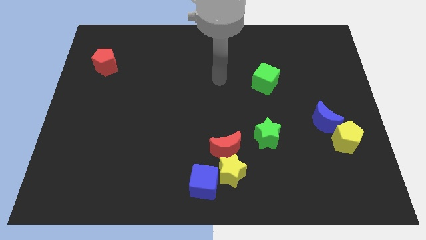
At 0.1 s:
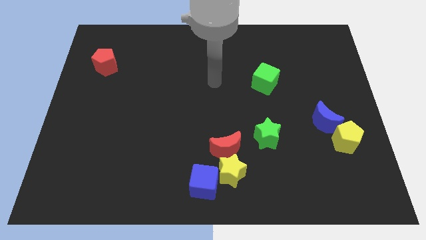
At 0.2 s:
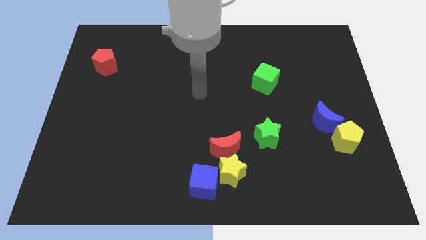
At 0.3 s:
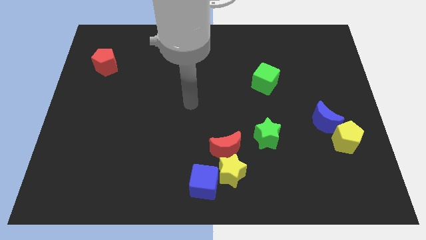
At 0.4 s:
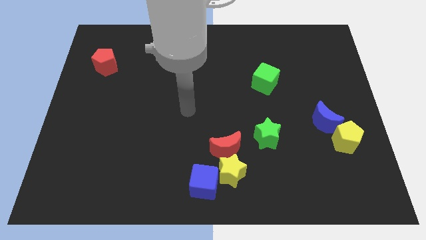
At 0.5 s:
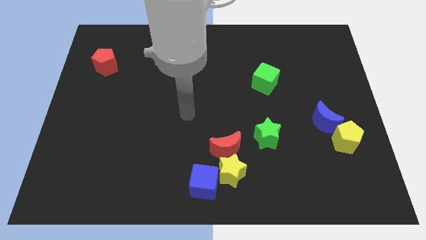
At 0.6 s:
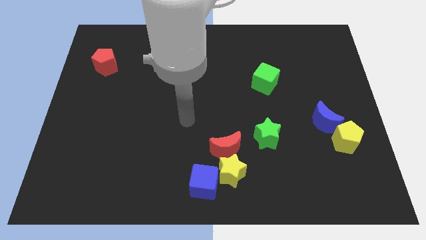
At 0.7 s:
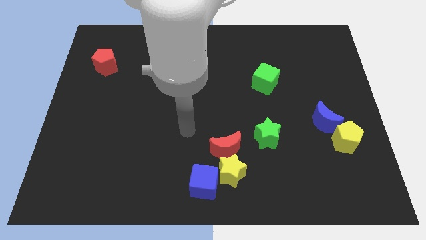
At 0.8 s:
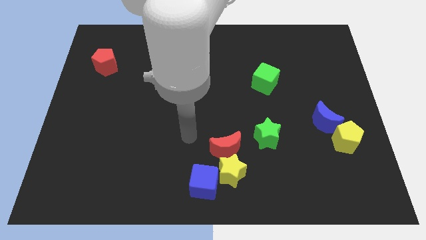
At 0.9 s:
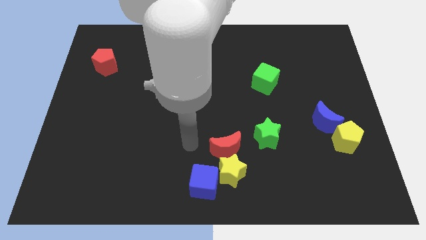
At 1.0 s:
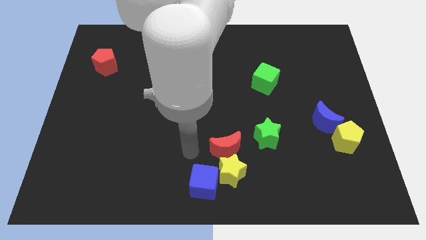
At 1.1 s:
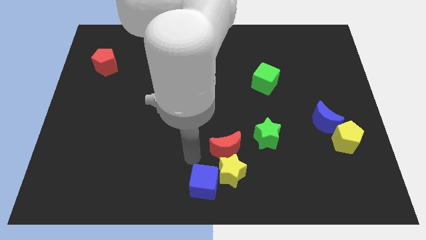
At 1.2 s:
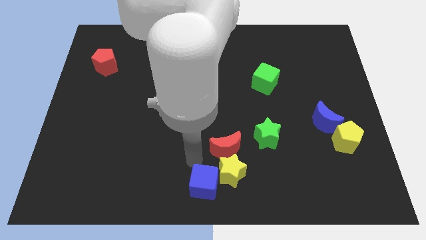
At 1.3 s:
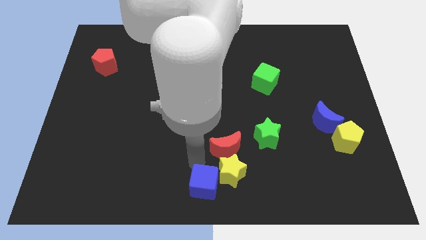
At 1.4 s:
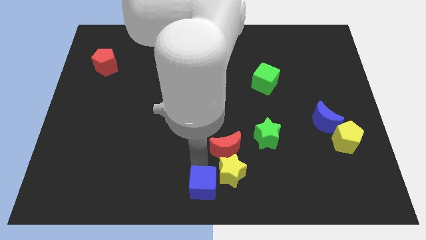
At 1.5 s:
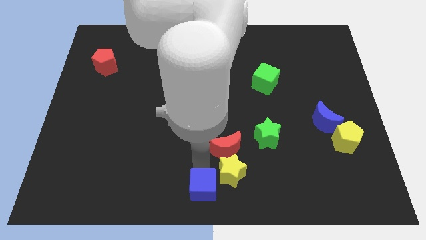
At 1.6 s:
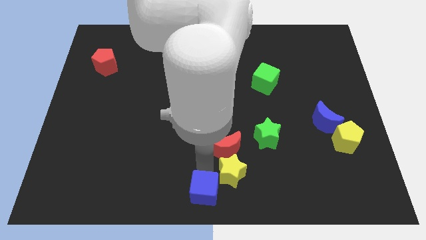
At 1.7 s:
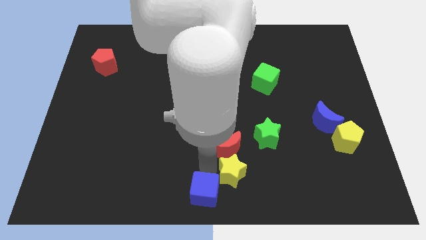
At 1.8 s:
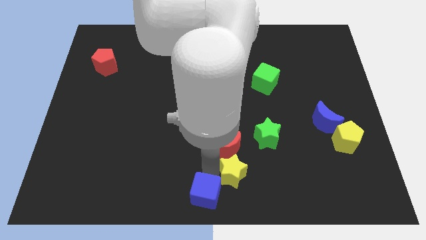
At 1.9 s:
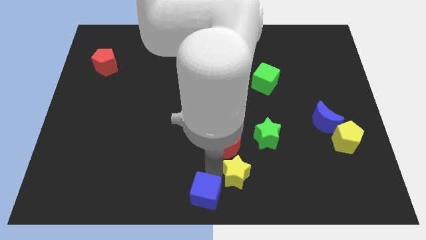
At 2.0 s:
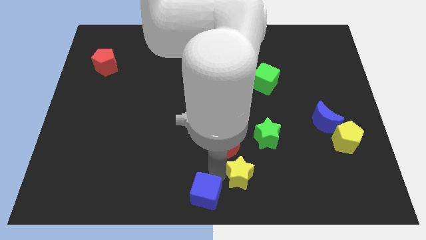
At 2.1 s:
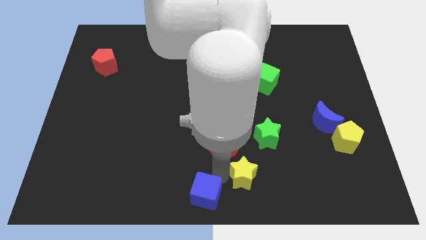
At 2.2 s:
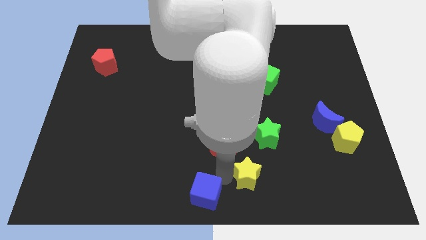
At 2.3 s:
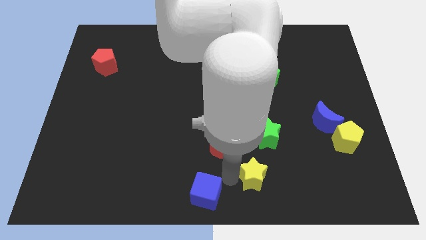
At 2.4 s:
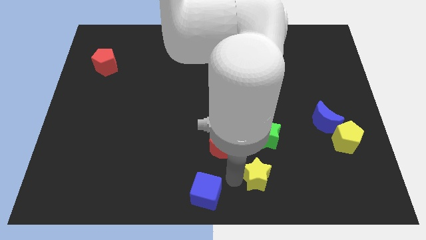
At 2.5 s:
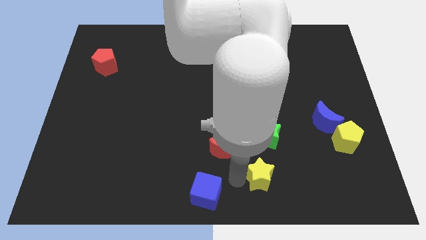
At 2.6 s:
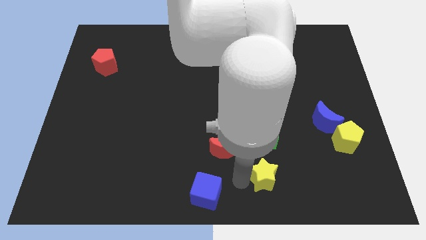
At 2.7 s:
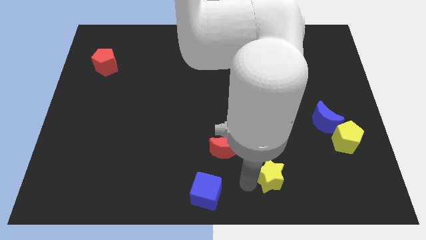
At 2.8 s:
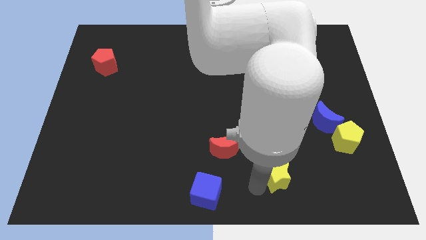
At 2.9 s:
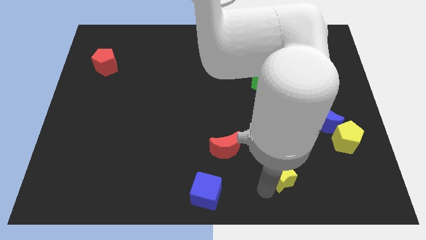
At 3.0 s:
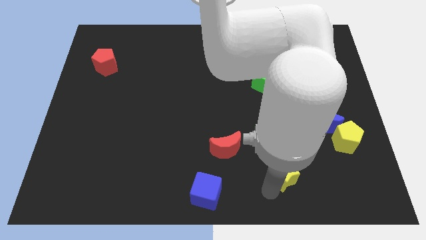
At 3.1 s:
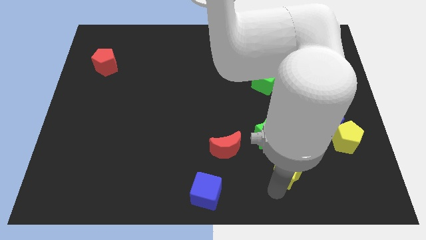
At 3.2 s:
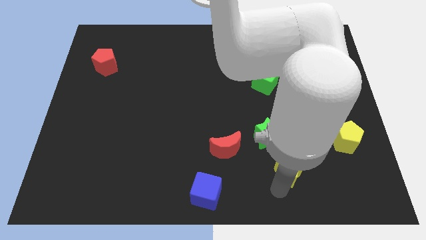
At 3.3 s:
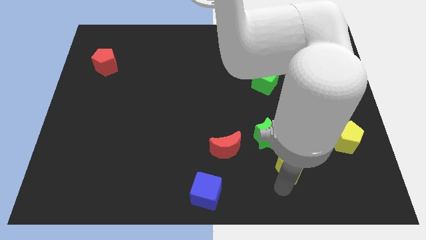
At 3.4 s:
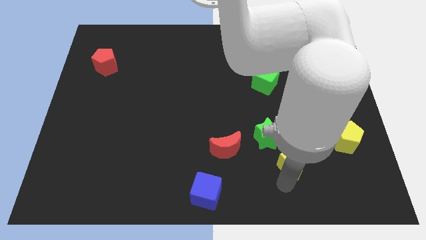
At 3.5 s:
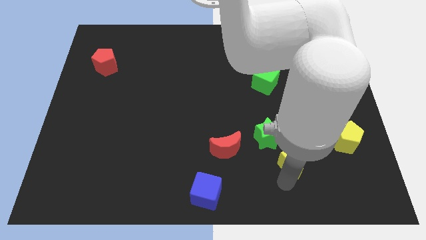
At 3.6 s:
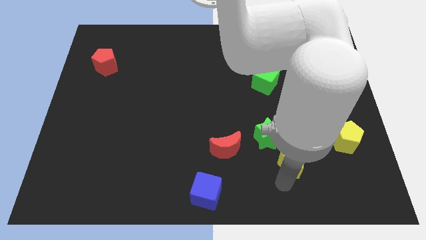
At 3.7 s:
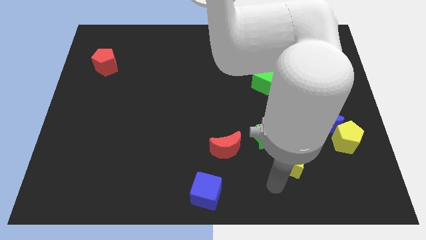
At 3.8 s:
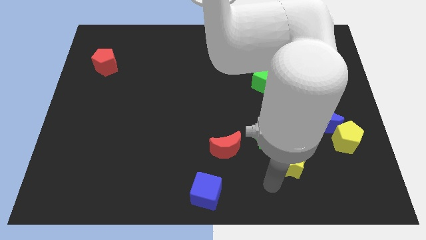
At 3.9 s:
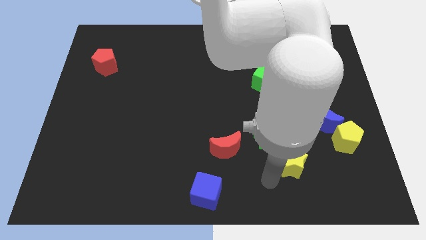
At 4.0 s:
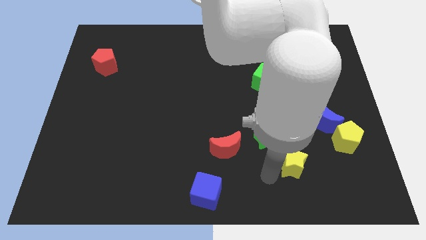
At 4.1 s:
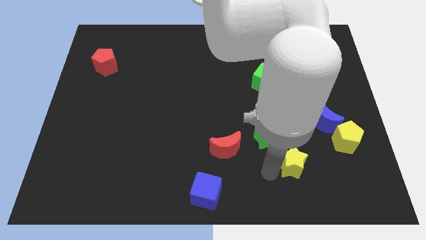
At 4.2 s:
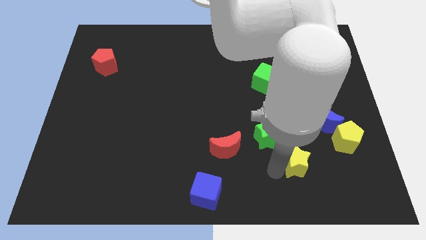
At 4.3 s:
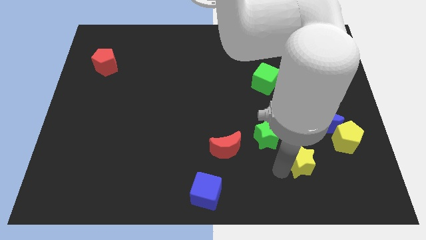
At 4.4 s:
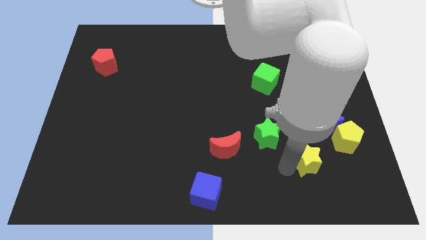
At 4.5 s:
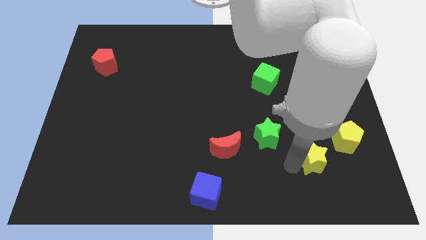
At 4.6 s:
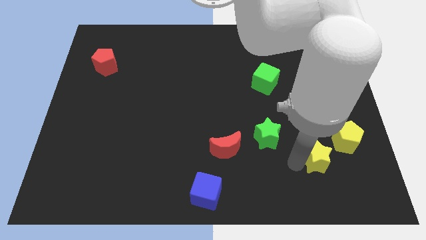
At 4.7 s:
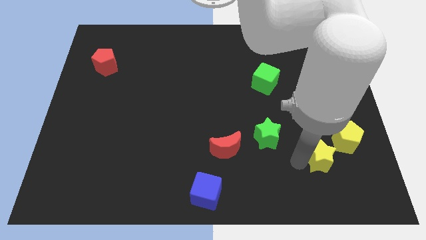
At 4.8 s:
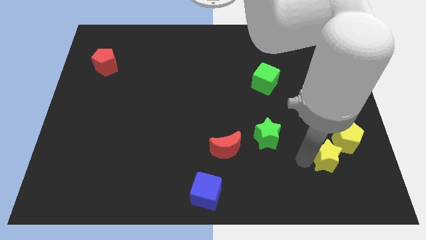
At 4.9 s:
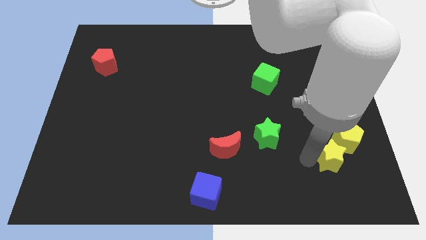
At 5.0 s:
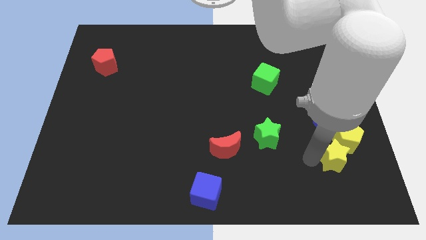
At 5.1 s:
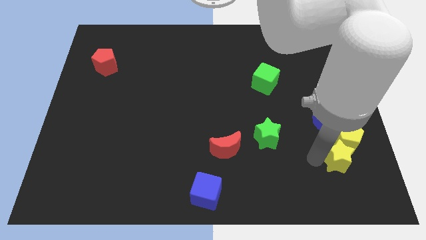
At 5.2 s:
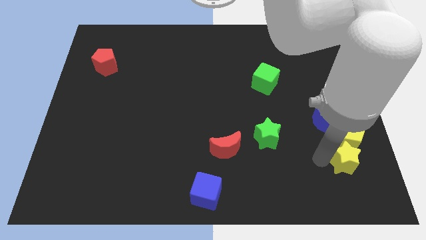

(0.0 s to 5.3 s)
slide the yellow star close to the yellow pentagon

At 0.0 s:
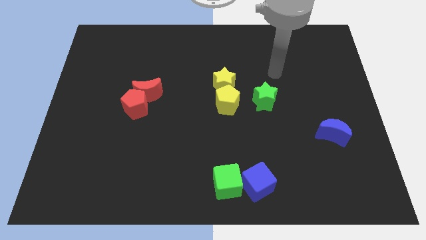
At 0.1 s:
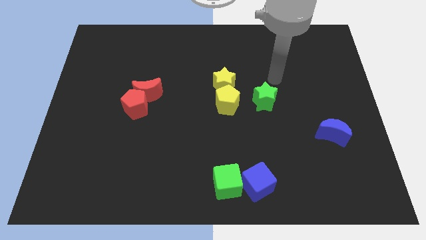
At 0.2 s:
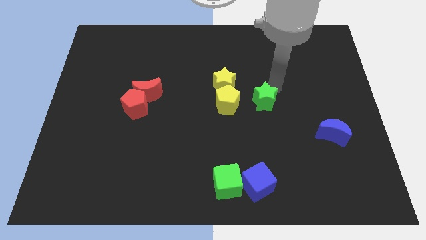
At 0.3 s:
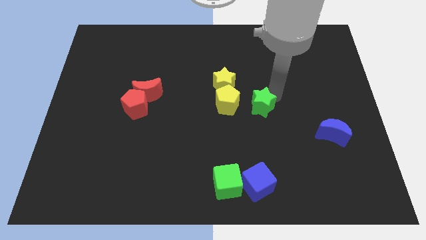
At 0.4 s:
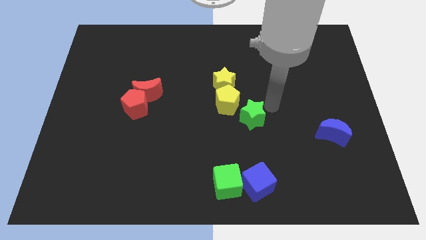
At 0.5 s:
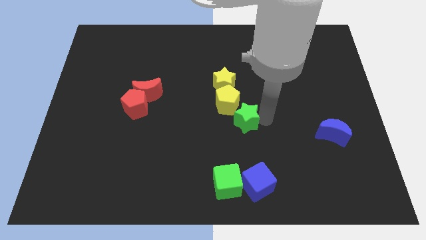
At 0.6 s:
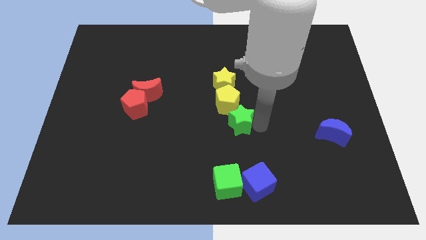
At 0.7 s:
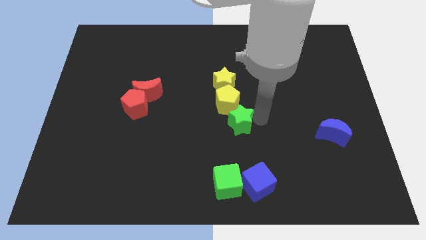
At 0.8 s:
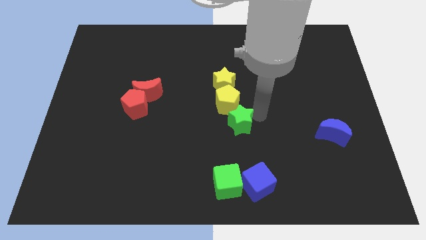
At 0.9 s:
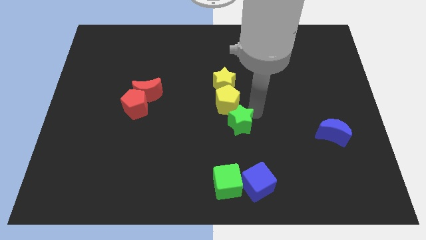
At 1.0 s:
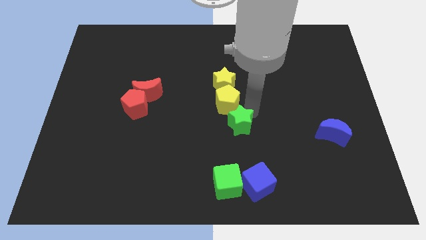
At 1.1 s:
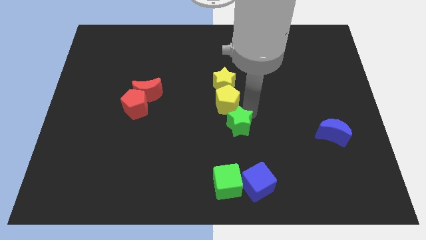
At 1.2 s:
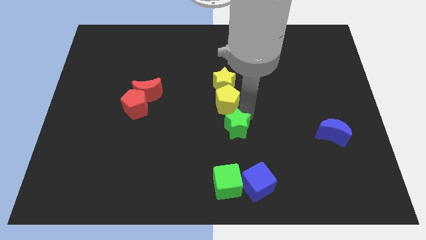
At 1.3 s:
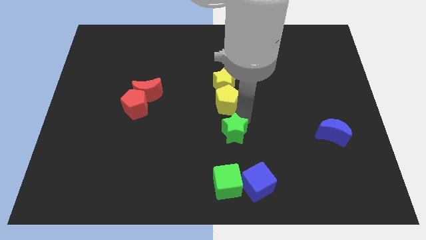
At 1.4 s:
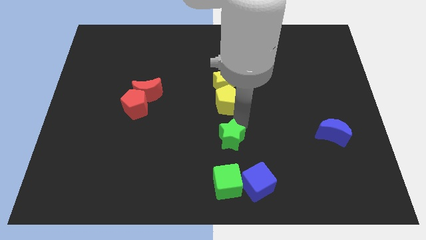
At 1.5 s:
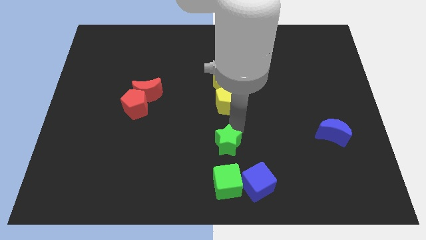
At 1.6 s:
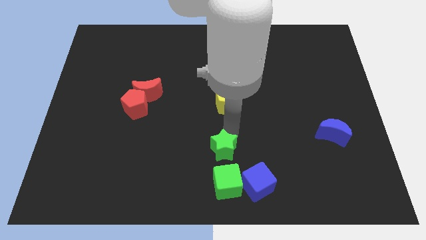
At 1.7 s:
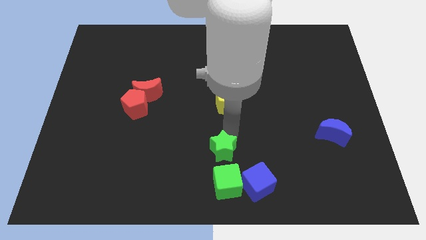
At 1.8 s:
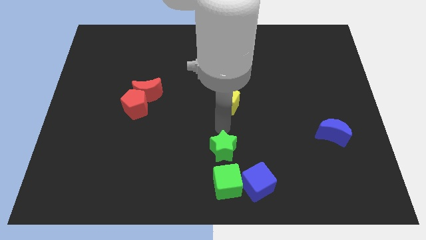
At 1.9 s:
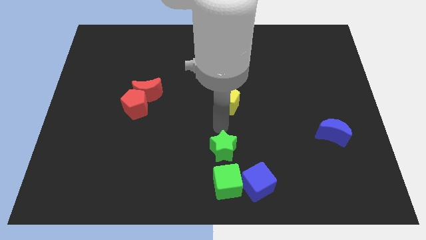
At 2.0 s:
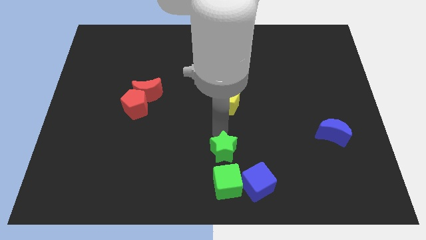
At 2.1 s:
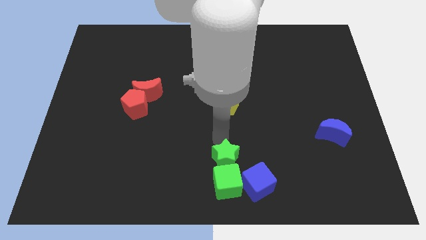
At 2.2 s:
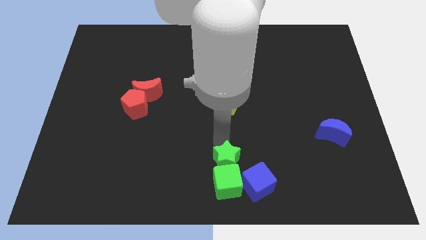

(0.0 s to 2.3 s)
put the green star towards the green cube

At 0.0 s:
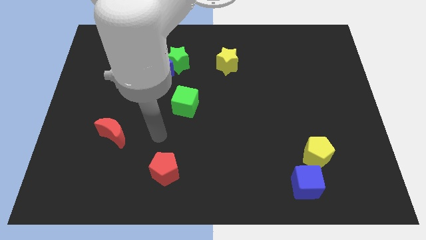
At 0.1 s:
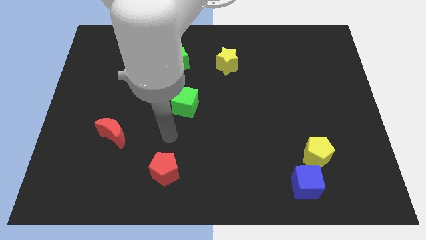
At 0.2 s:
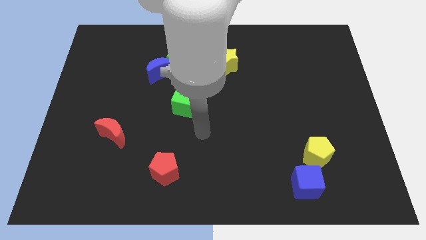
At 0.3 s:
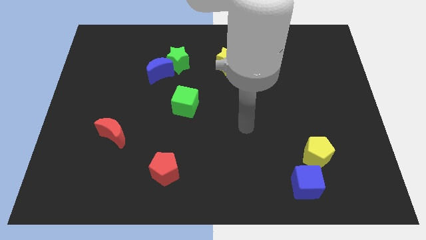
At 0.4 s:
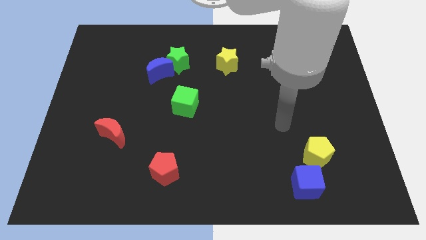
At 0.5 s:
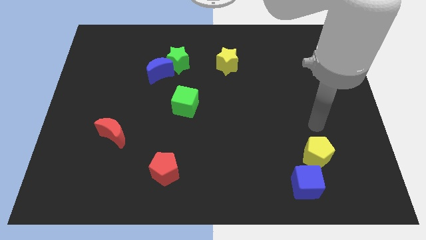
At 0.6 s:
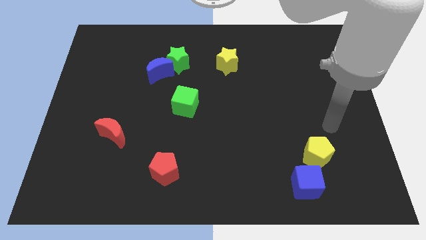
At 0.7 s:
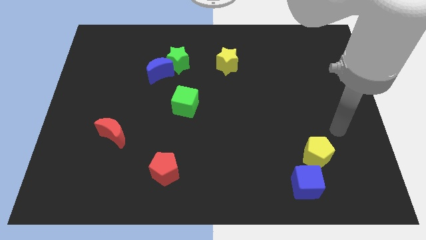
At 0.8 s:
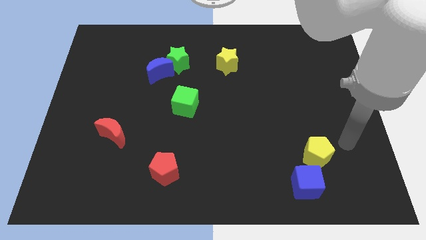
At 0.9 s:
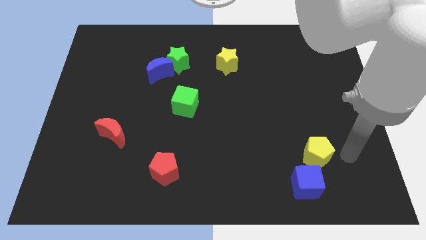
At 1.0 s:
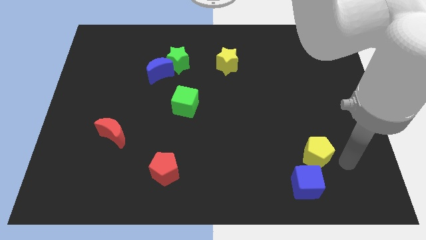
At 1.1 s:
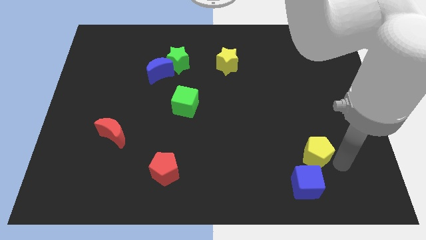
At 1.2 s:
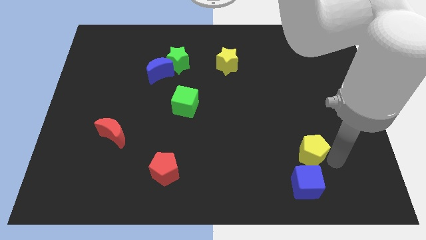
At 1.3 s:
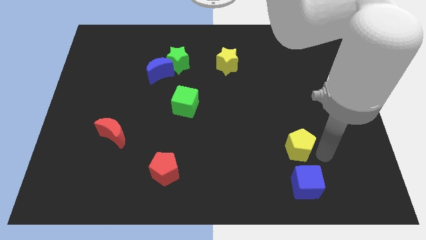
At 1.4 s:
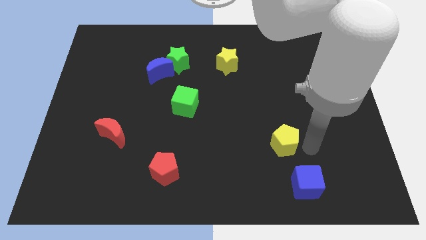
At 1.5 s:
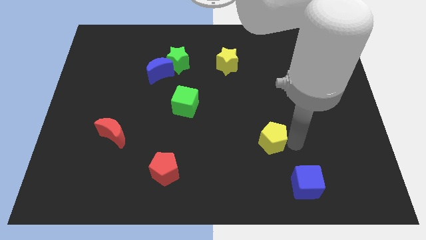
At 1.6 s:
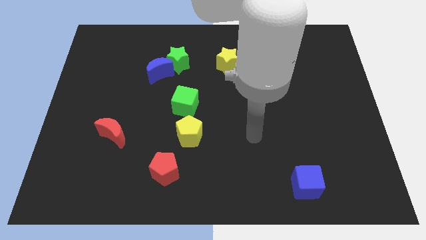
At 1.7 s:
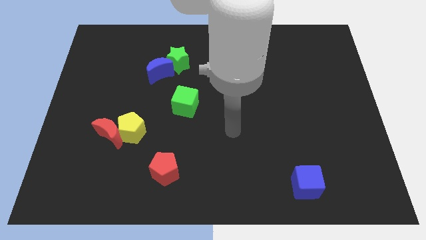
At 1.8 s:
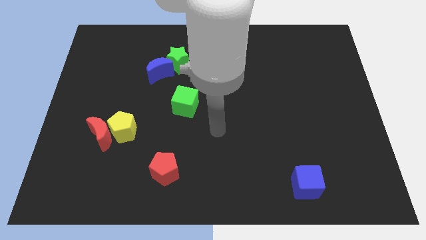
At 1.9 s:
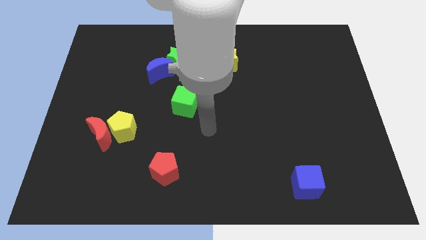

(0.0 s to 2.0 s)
slide the yellow pentagon next to the red moon
